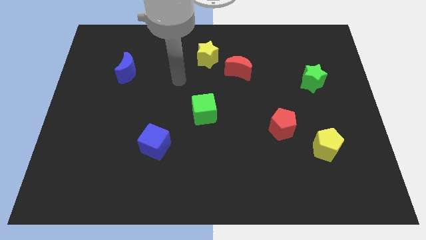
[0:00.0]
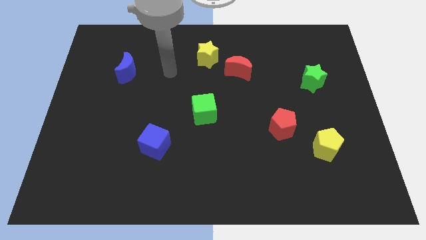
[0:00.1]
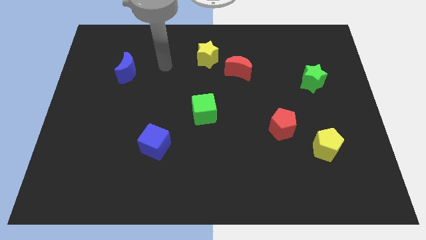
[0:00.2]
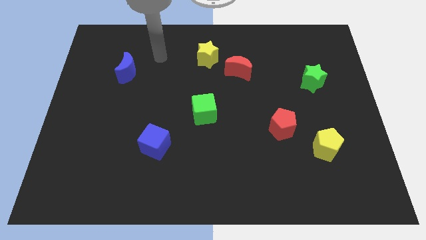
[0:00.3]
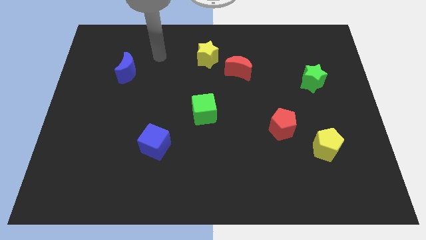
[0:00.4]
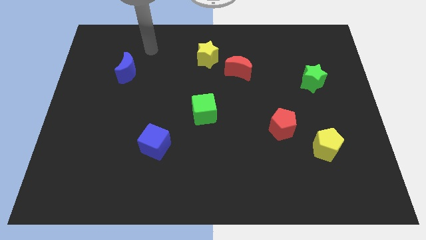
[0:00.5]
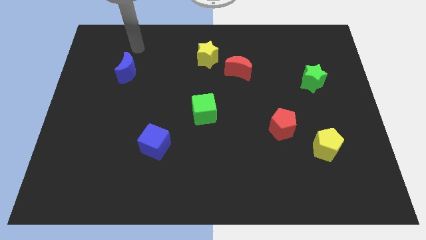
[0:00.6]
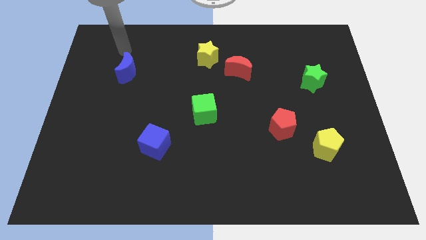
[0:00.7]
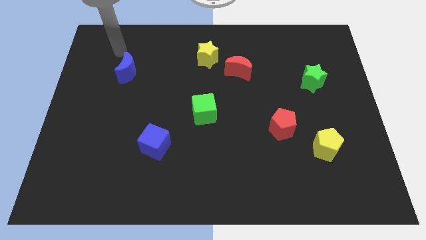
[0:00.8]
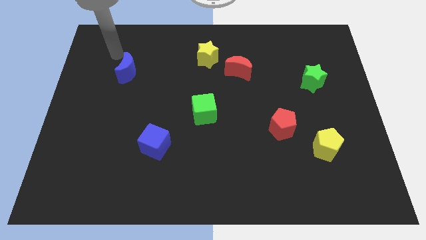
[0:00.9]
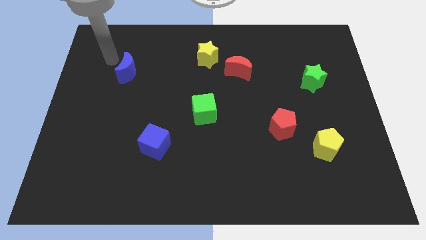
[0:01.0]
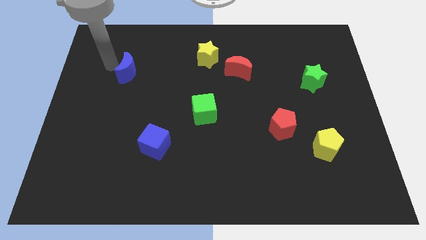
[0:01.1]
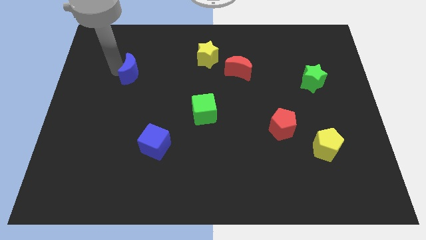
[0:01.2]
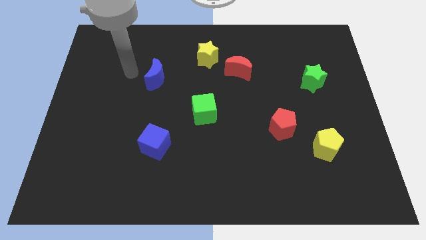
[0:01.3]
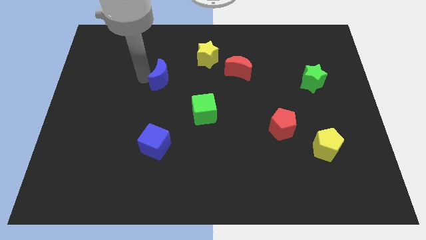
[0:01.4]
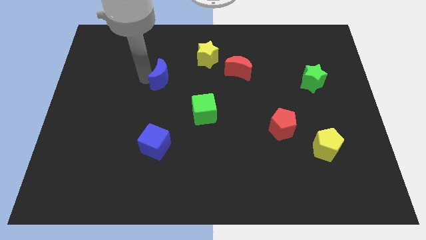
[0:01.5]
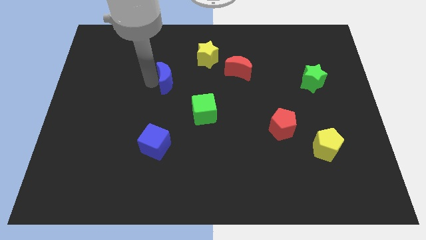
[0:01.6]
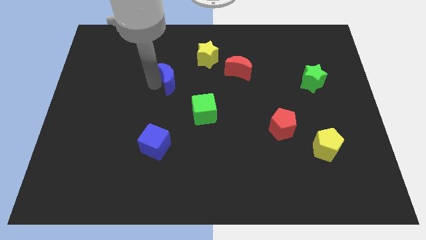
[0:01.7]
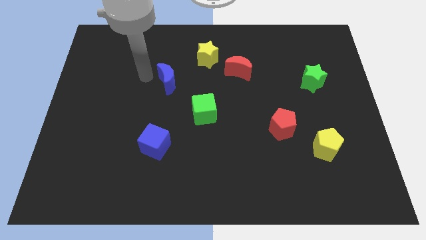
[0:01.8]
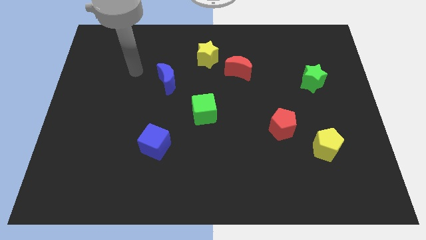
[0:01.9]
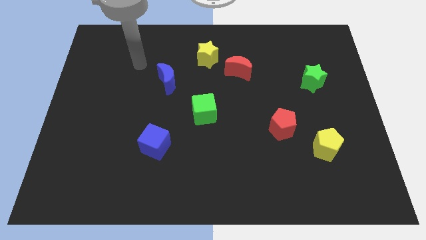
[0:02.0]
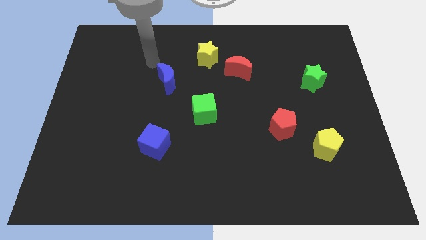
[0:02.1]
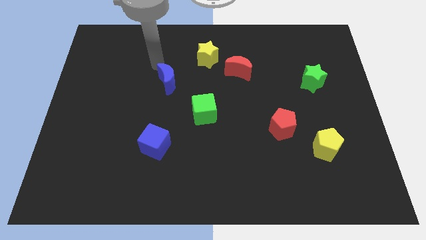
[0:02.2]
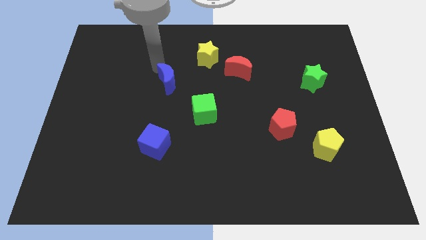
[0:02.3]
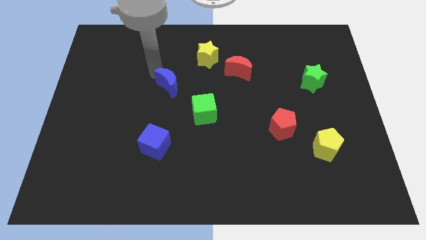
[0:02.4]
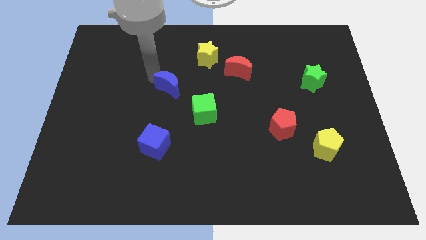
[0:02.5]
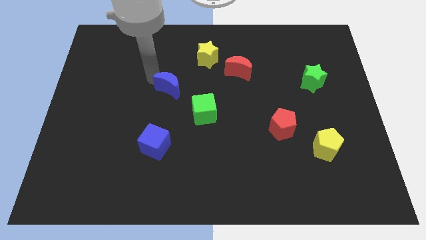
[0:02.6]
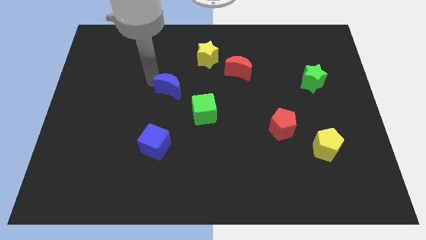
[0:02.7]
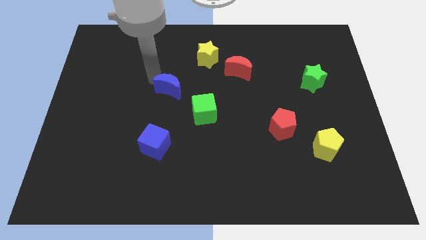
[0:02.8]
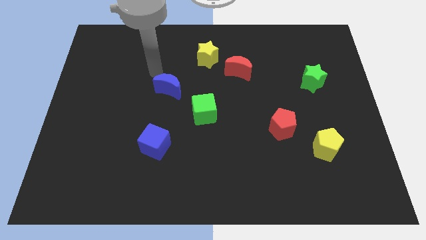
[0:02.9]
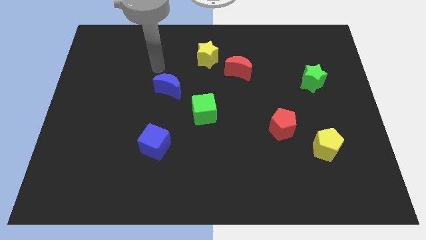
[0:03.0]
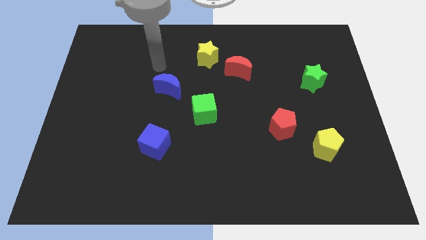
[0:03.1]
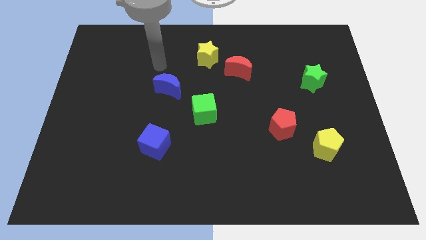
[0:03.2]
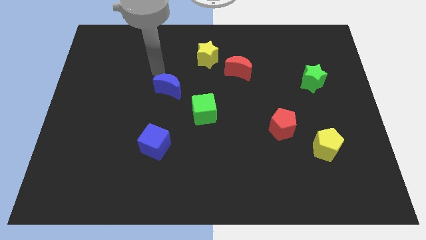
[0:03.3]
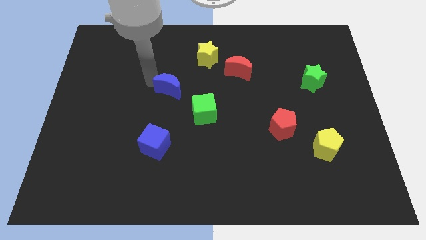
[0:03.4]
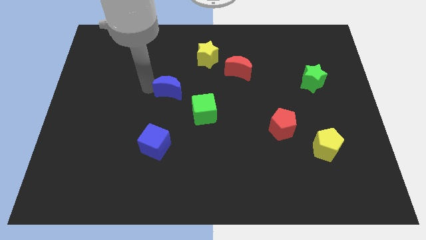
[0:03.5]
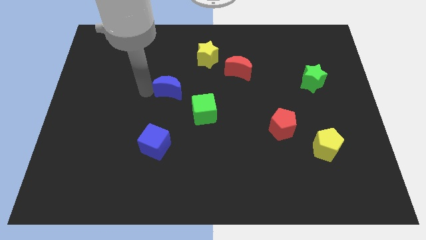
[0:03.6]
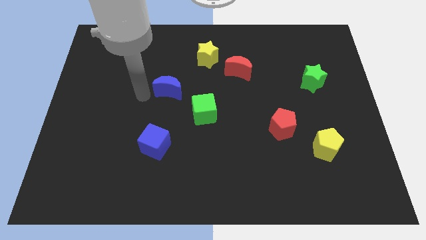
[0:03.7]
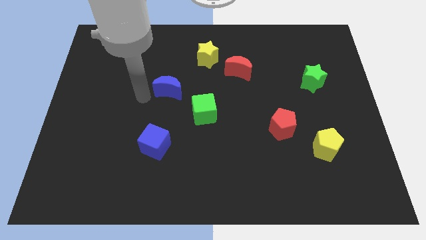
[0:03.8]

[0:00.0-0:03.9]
push the blue moon to the vertical top of the blue cube

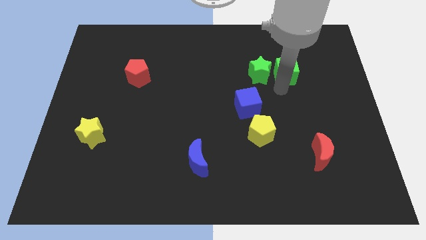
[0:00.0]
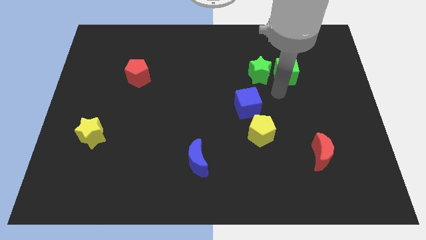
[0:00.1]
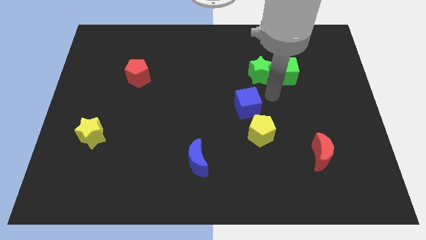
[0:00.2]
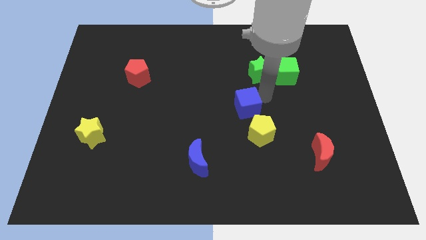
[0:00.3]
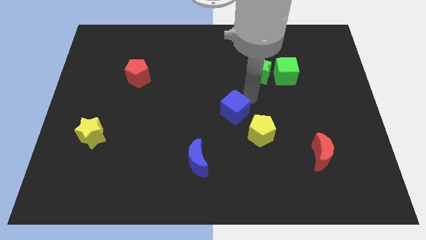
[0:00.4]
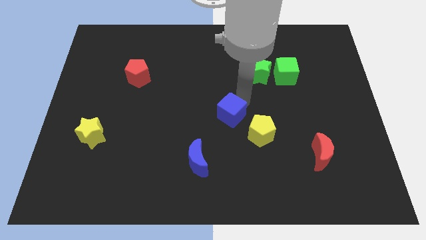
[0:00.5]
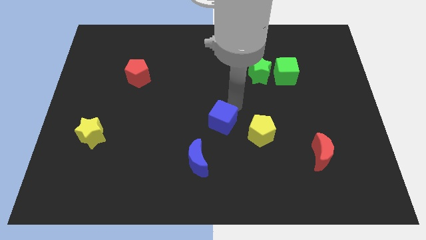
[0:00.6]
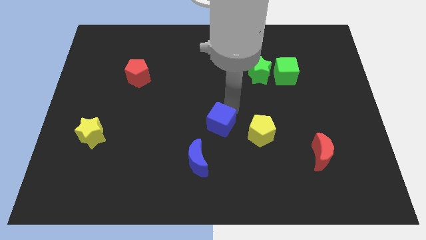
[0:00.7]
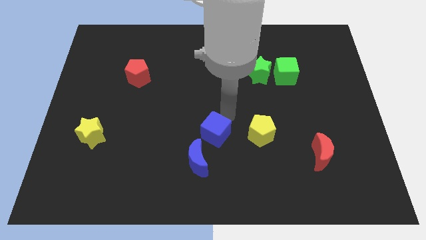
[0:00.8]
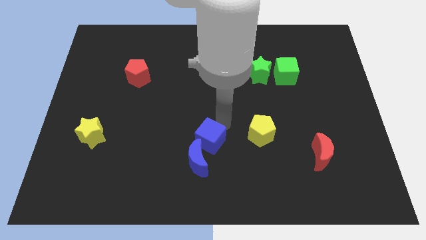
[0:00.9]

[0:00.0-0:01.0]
place blue cube to the left of yellow pentagon

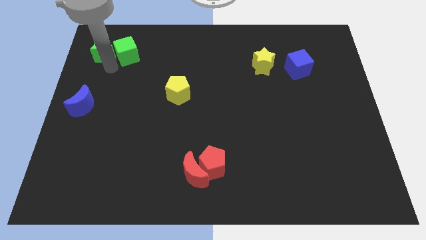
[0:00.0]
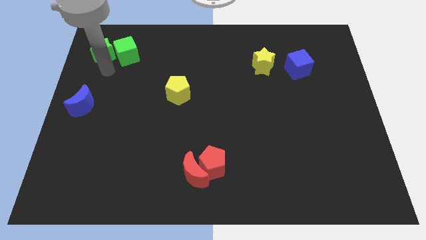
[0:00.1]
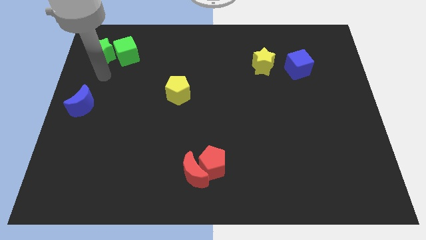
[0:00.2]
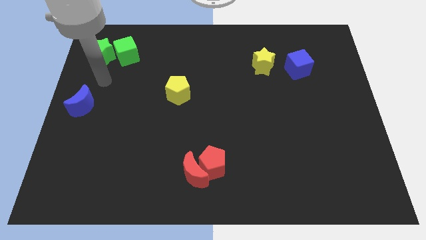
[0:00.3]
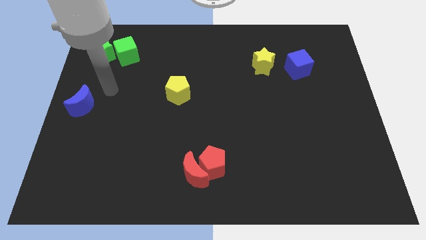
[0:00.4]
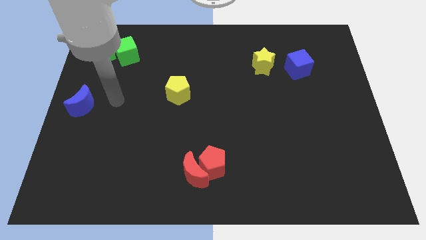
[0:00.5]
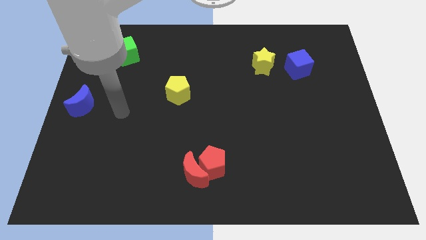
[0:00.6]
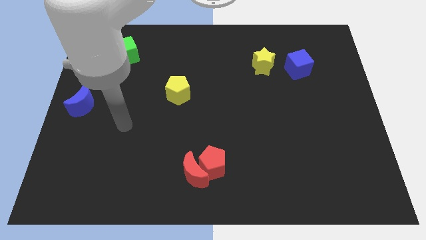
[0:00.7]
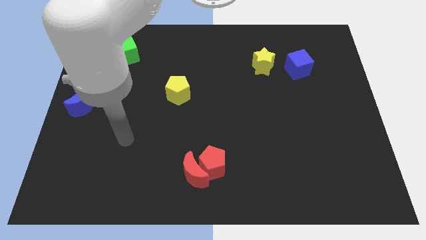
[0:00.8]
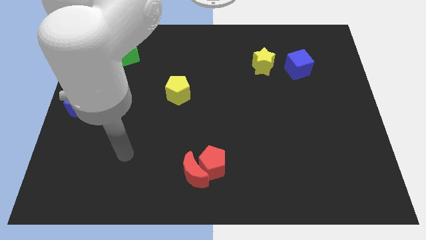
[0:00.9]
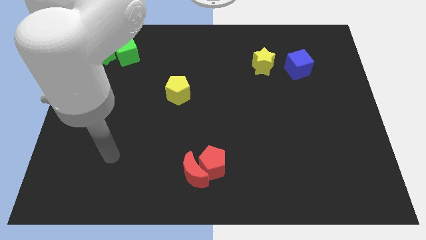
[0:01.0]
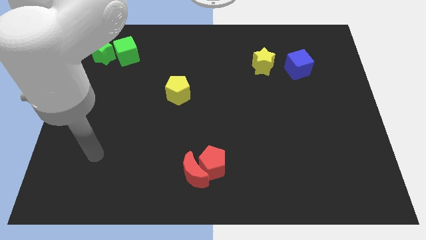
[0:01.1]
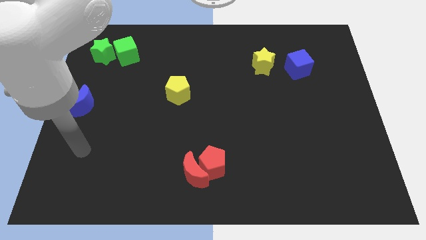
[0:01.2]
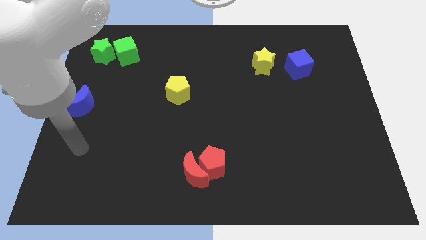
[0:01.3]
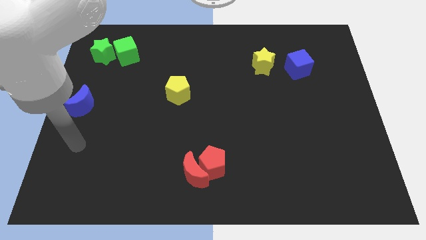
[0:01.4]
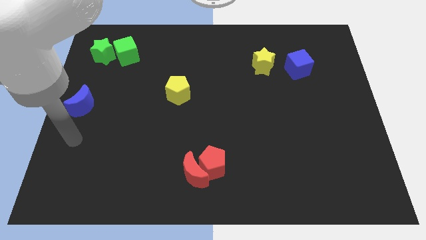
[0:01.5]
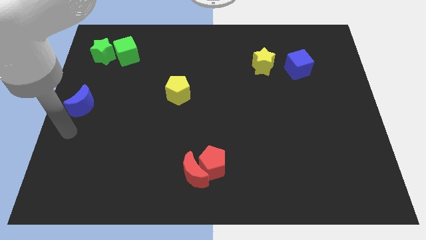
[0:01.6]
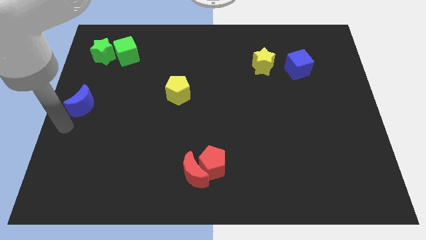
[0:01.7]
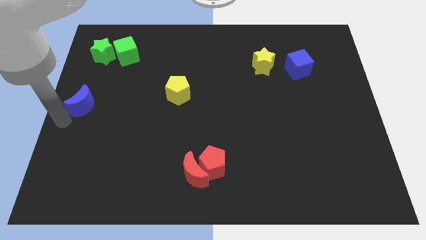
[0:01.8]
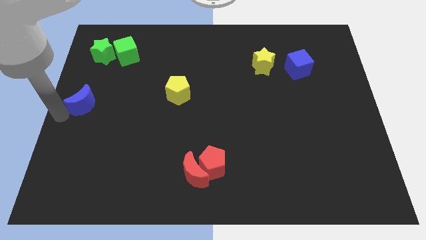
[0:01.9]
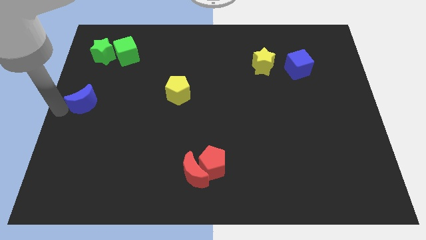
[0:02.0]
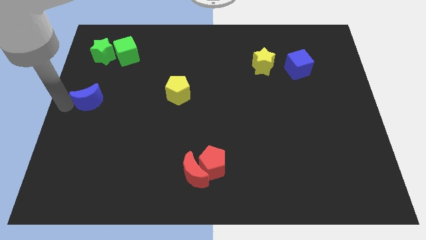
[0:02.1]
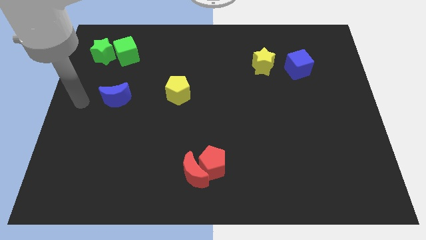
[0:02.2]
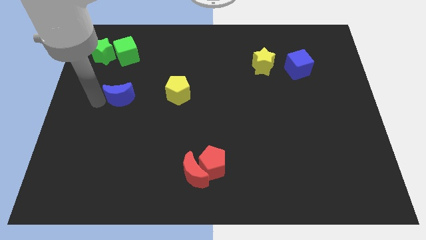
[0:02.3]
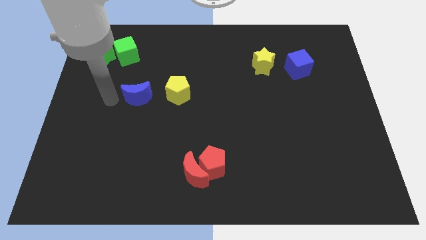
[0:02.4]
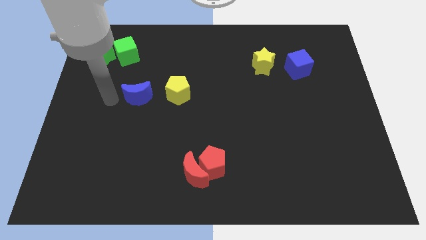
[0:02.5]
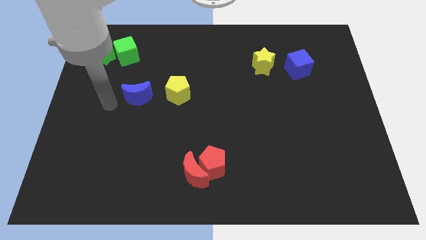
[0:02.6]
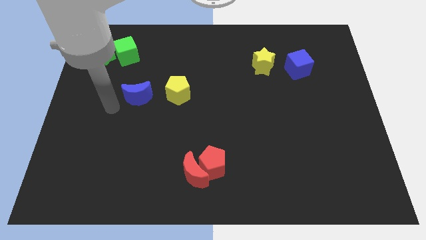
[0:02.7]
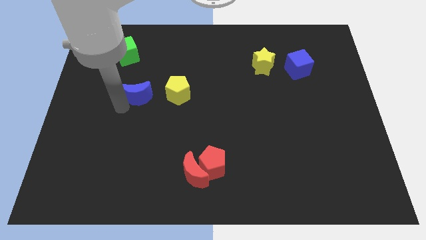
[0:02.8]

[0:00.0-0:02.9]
place the blue moon below the green cube

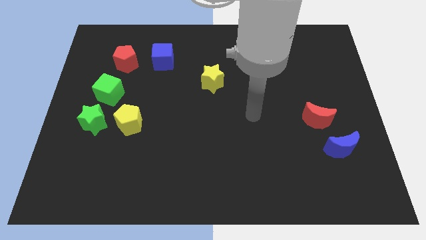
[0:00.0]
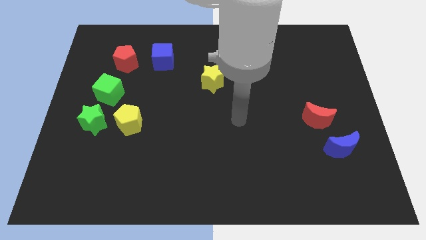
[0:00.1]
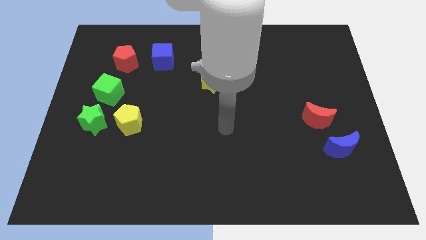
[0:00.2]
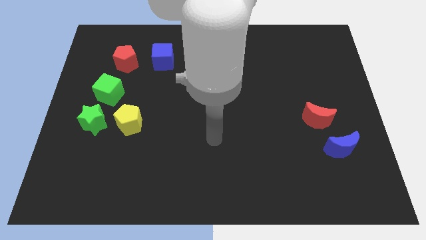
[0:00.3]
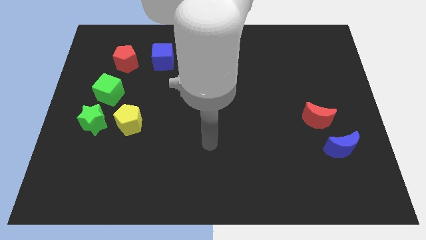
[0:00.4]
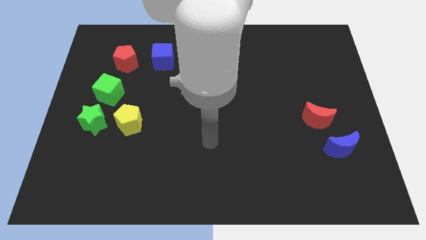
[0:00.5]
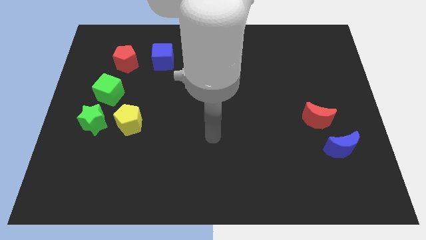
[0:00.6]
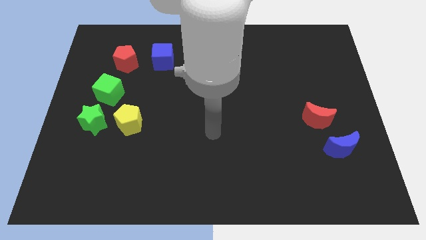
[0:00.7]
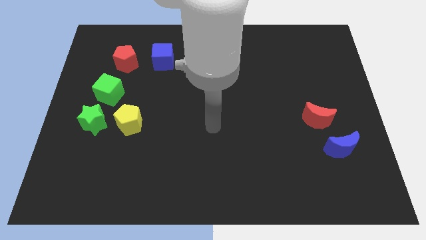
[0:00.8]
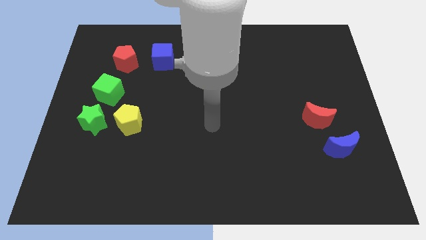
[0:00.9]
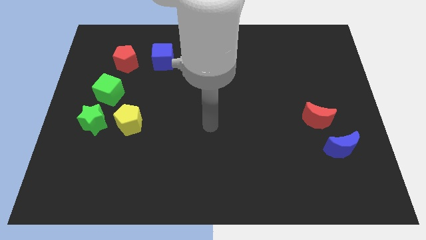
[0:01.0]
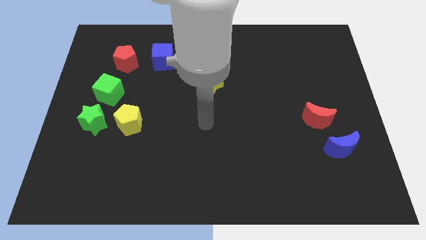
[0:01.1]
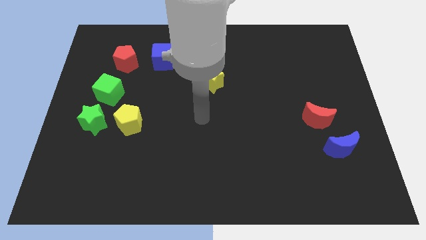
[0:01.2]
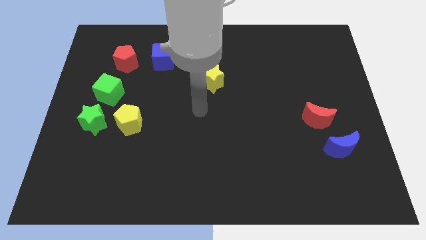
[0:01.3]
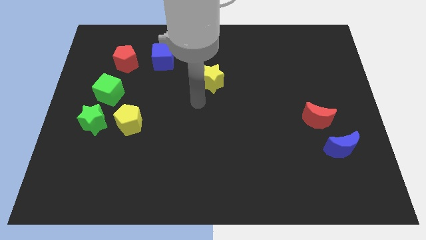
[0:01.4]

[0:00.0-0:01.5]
move your arm close to the yellow star
